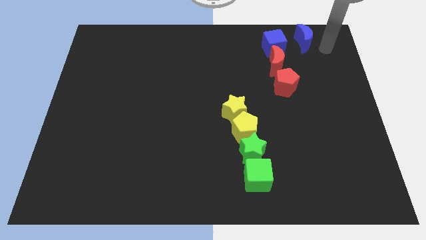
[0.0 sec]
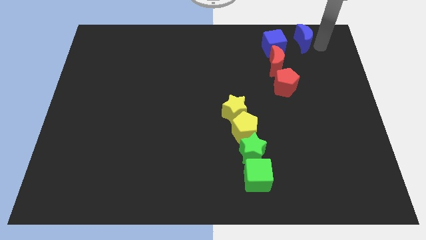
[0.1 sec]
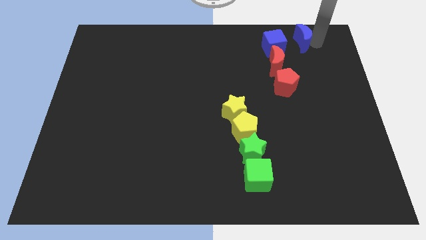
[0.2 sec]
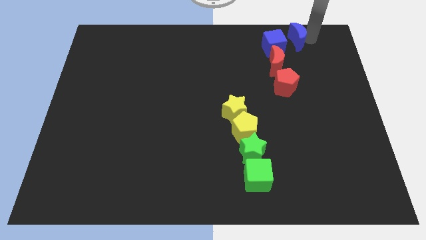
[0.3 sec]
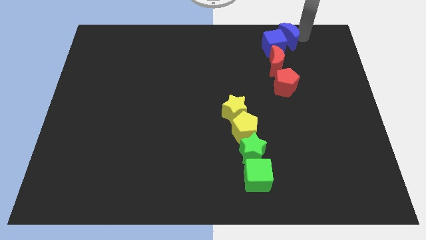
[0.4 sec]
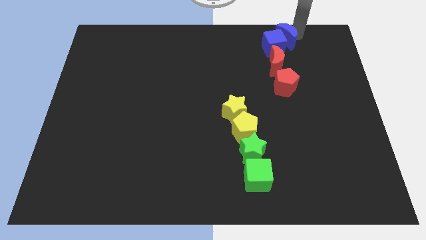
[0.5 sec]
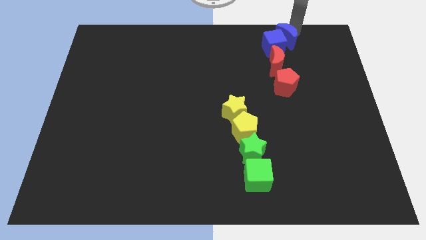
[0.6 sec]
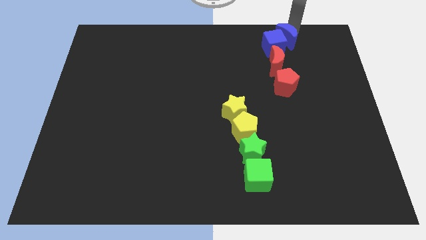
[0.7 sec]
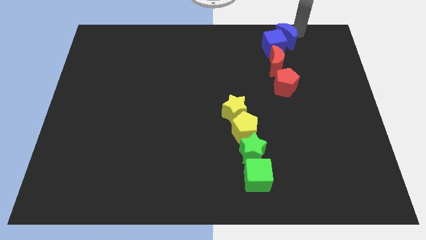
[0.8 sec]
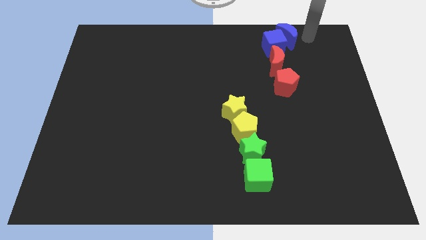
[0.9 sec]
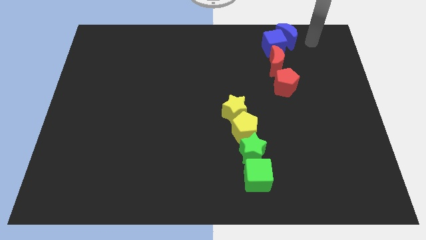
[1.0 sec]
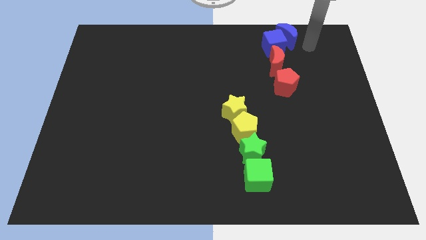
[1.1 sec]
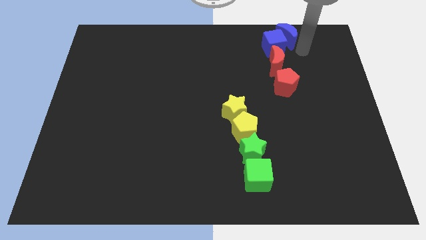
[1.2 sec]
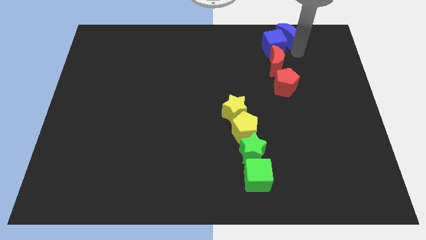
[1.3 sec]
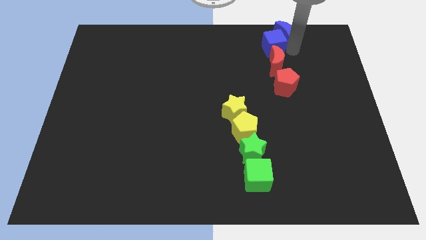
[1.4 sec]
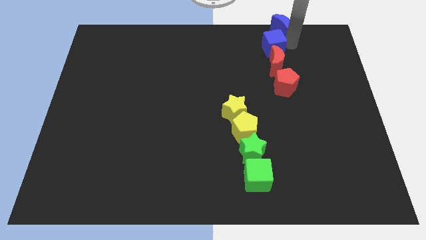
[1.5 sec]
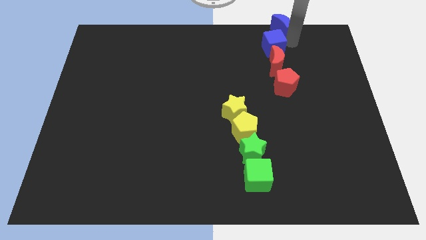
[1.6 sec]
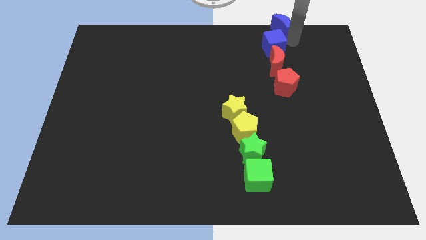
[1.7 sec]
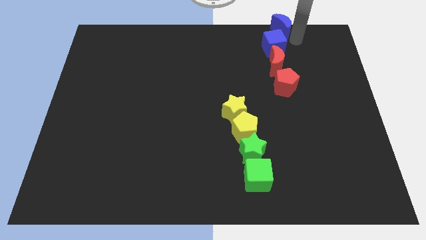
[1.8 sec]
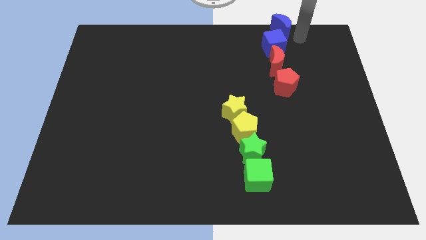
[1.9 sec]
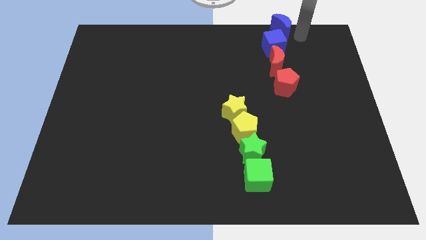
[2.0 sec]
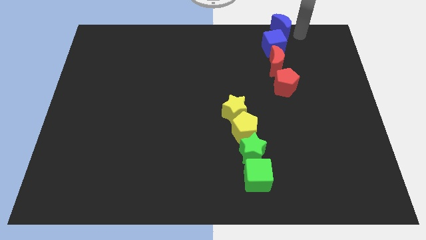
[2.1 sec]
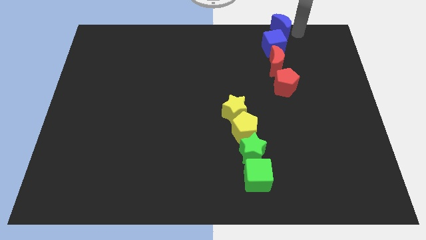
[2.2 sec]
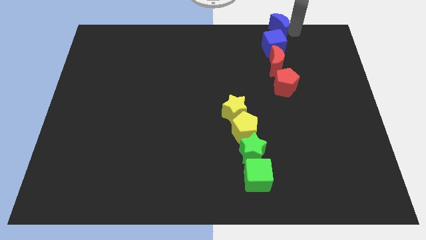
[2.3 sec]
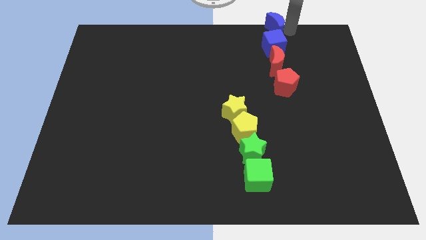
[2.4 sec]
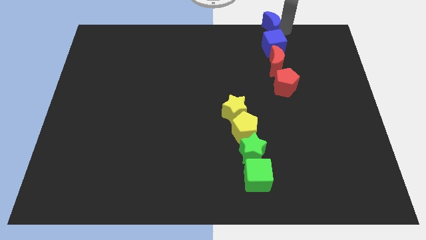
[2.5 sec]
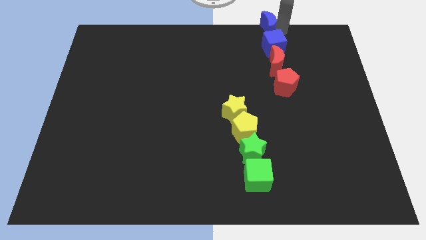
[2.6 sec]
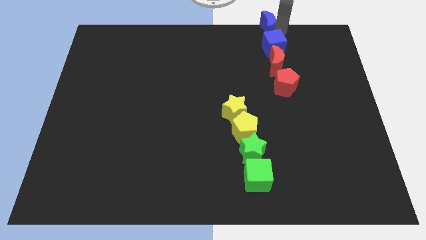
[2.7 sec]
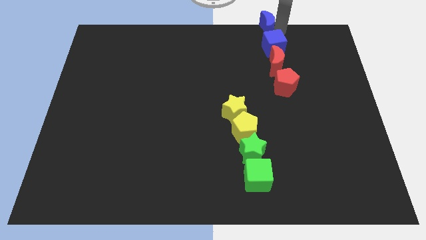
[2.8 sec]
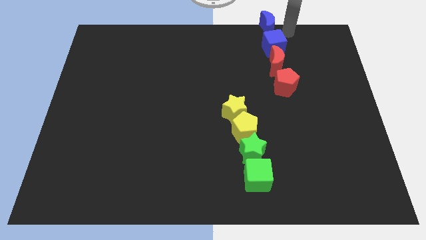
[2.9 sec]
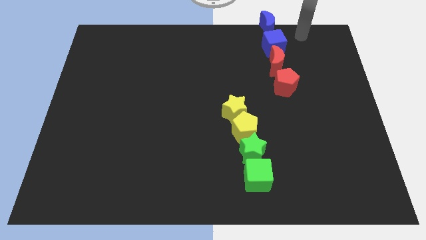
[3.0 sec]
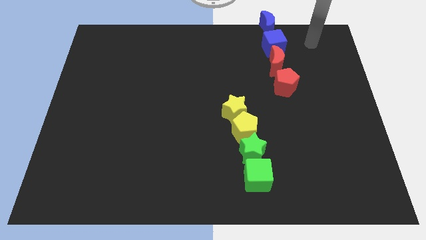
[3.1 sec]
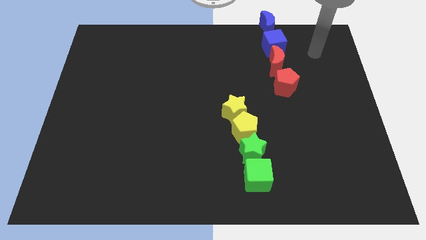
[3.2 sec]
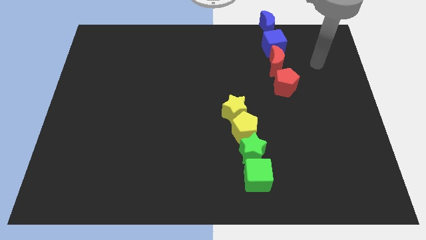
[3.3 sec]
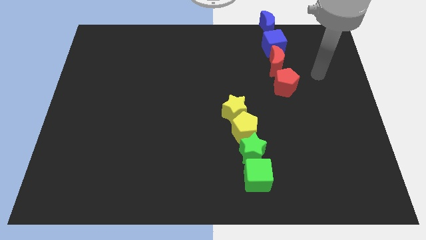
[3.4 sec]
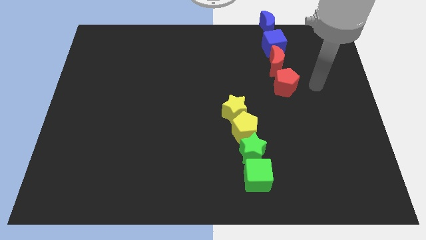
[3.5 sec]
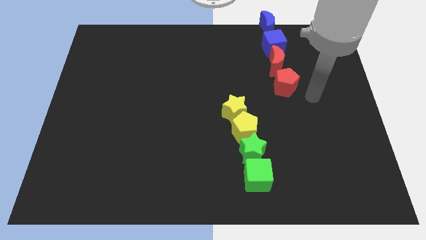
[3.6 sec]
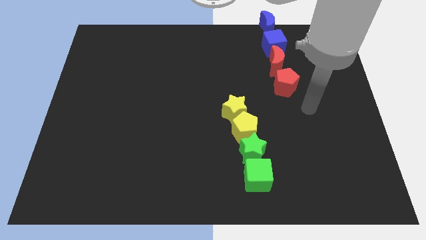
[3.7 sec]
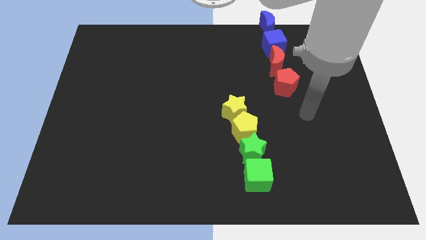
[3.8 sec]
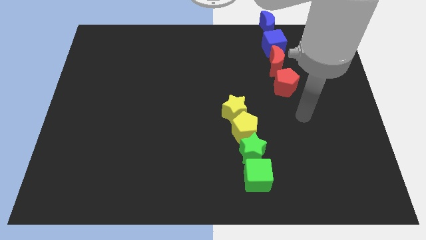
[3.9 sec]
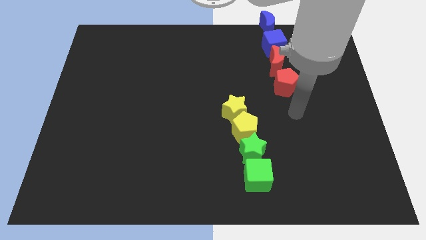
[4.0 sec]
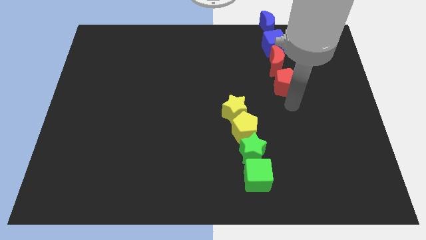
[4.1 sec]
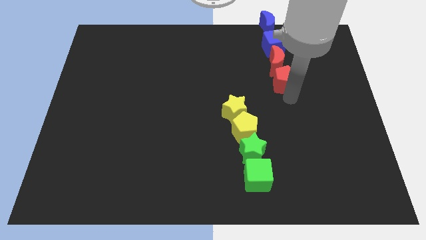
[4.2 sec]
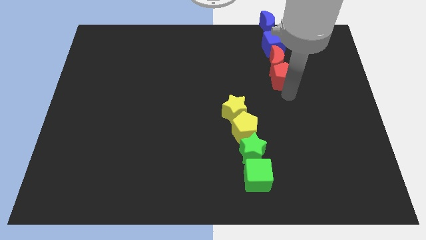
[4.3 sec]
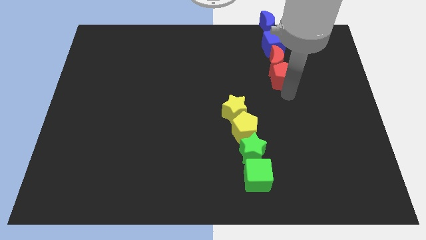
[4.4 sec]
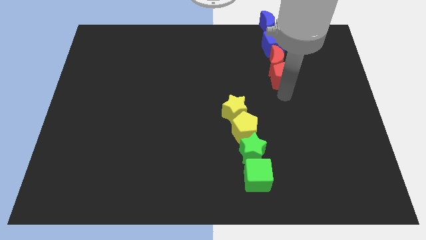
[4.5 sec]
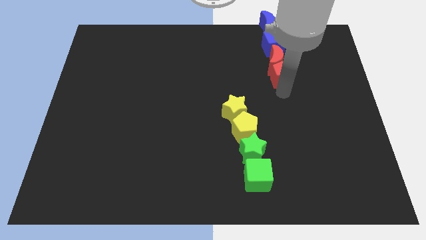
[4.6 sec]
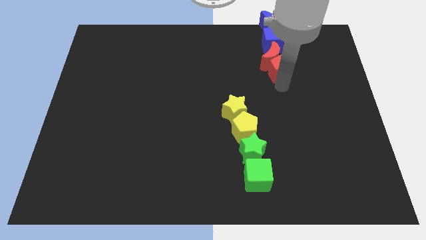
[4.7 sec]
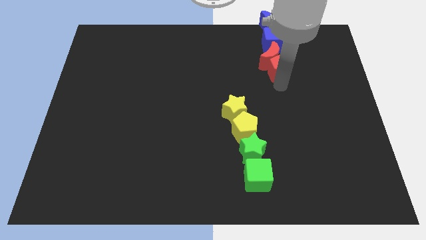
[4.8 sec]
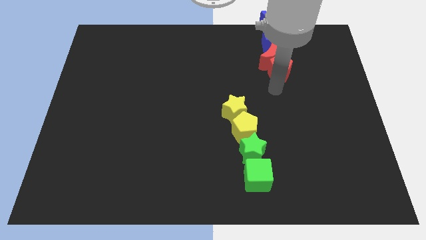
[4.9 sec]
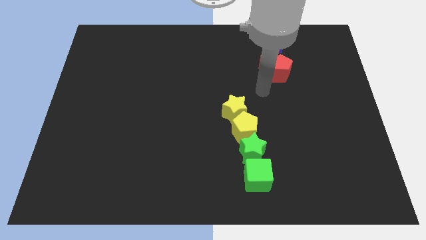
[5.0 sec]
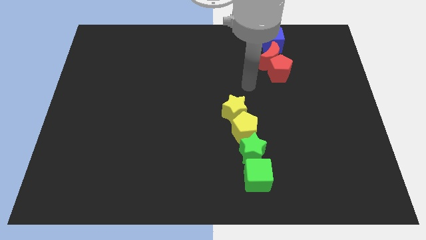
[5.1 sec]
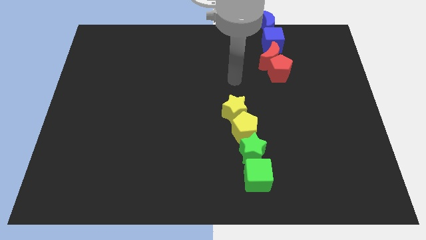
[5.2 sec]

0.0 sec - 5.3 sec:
place the blue moon above the blue cube

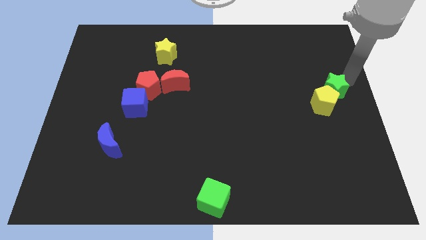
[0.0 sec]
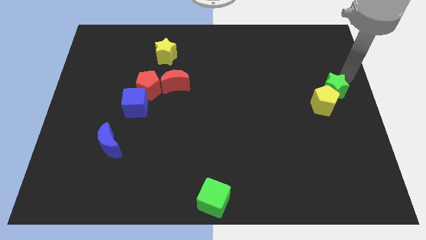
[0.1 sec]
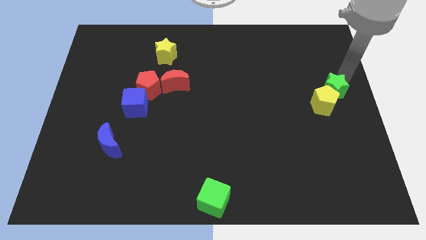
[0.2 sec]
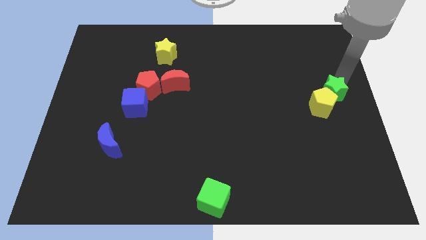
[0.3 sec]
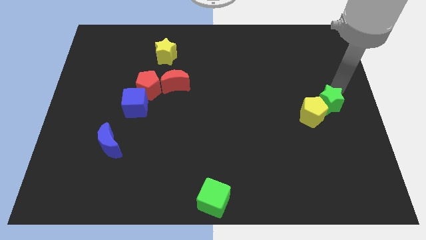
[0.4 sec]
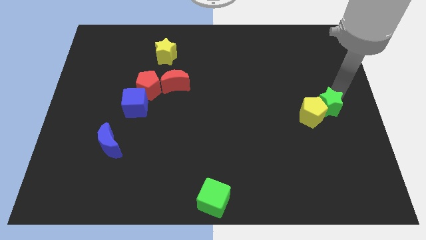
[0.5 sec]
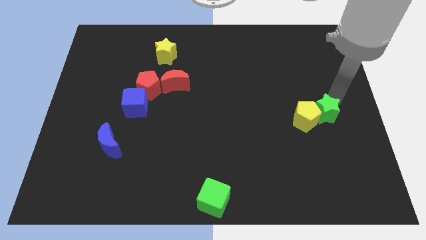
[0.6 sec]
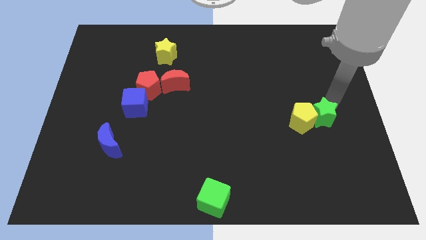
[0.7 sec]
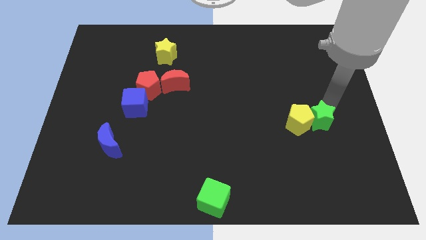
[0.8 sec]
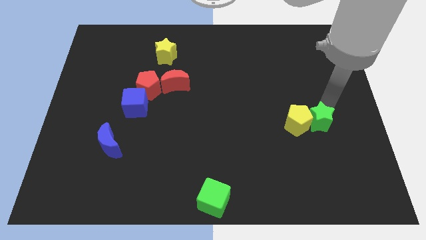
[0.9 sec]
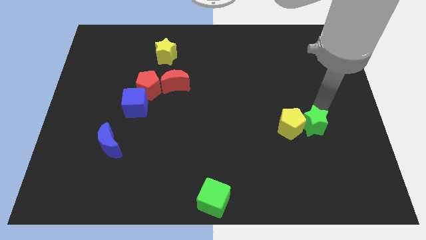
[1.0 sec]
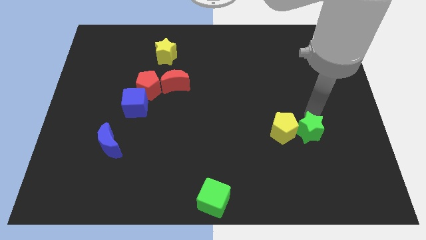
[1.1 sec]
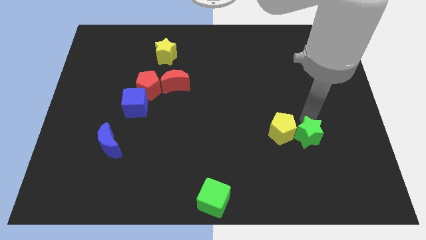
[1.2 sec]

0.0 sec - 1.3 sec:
push the green star and yellow pentagon downward

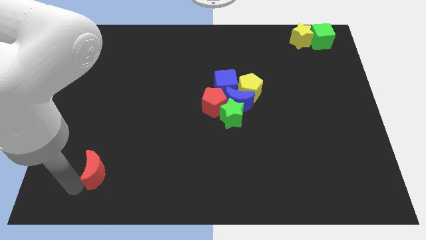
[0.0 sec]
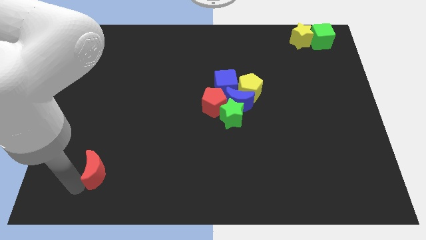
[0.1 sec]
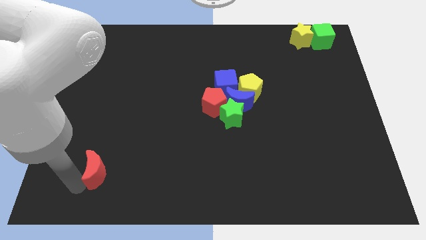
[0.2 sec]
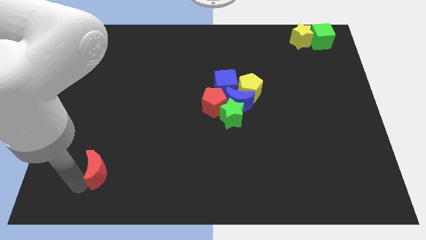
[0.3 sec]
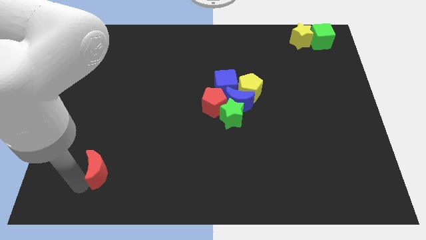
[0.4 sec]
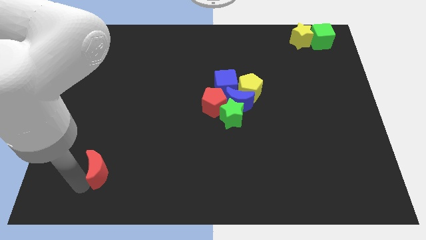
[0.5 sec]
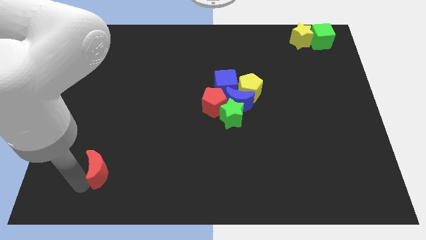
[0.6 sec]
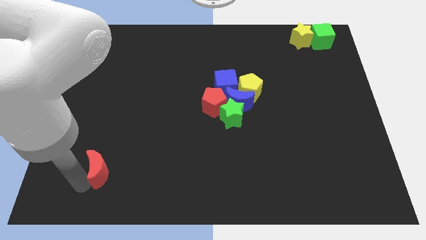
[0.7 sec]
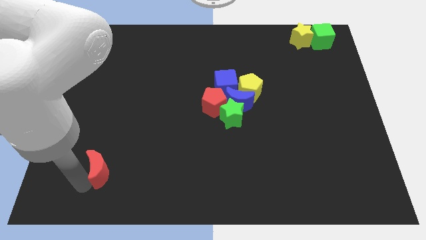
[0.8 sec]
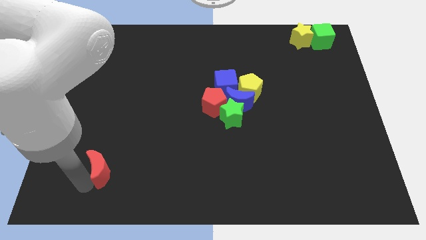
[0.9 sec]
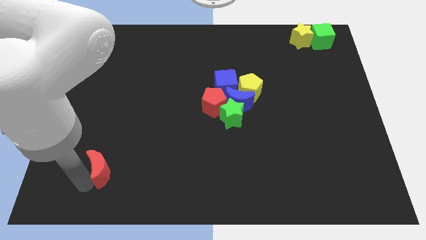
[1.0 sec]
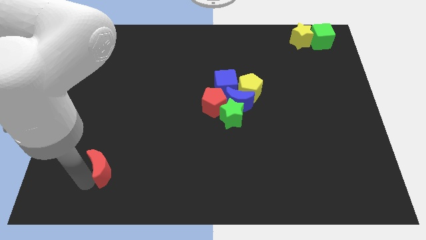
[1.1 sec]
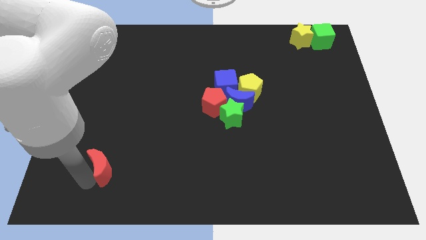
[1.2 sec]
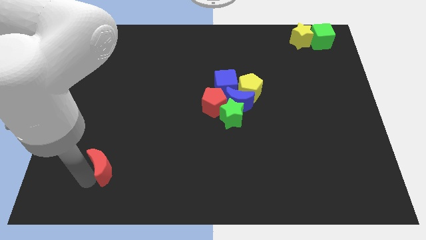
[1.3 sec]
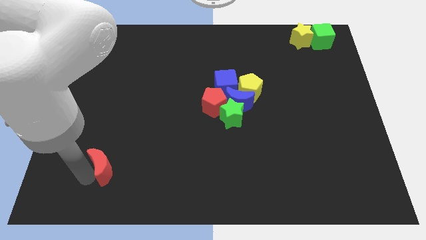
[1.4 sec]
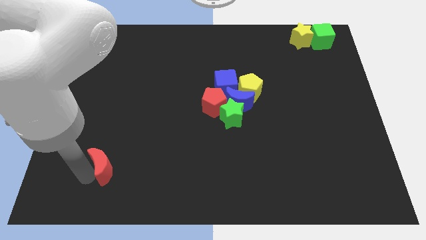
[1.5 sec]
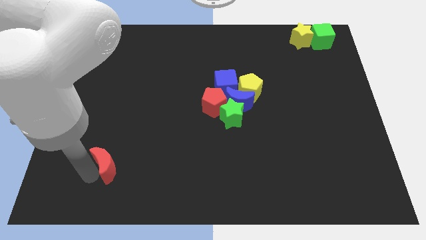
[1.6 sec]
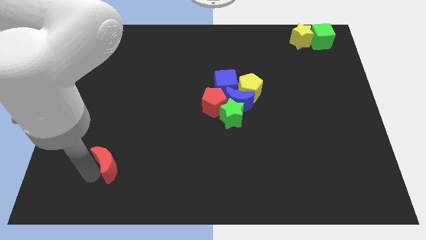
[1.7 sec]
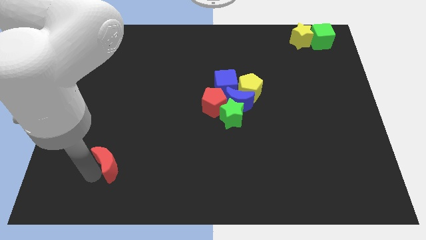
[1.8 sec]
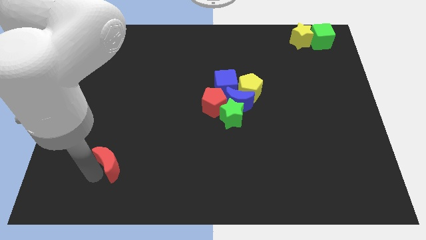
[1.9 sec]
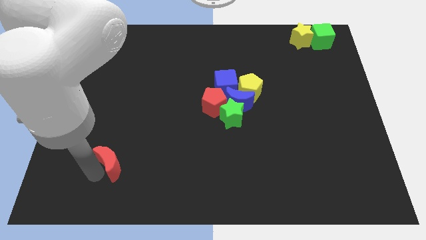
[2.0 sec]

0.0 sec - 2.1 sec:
push the red moon slightly to the right side of the board

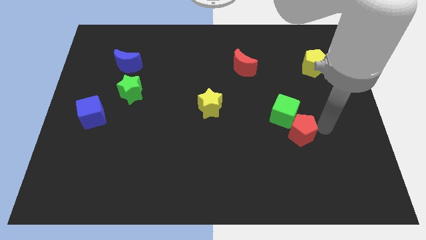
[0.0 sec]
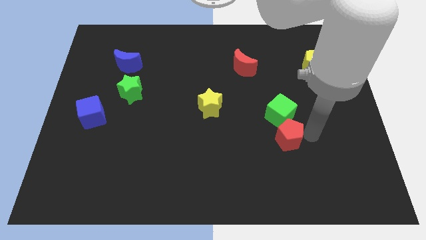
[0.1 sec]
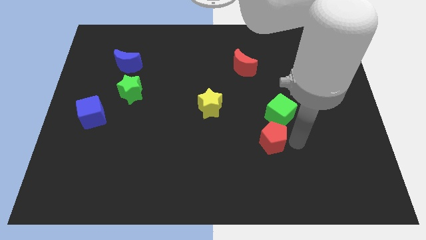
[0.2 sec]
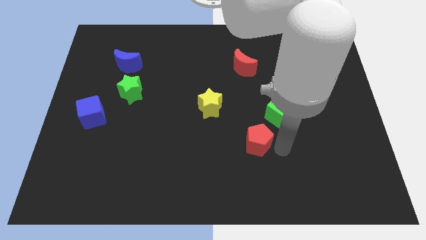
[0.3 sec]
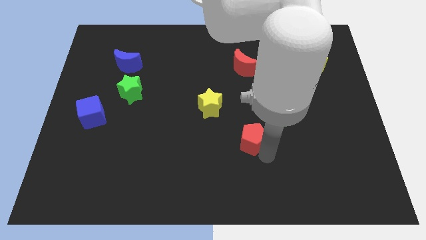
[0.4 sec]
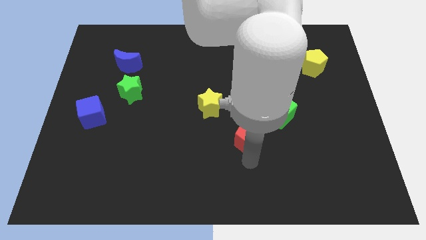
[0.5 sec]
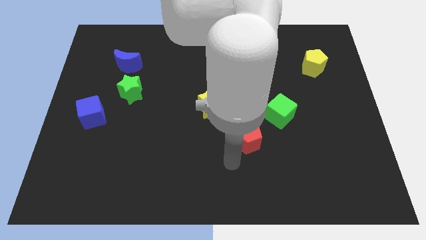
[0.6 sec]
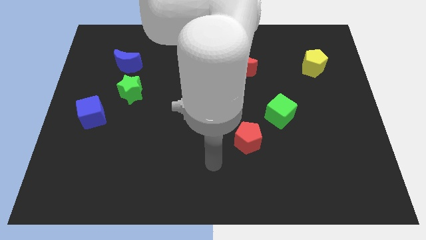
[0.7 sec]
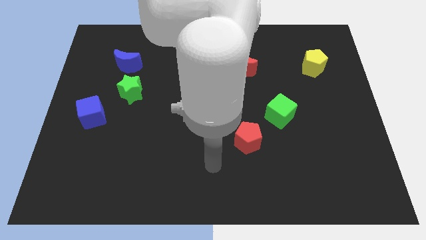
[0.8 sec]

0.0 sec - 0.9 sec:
place the red pentagon below the red crescent
